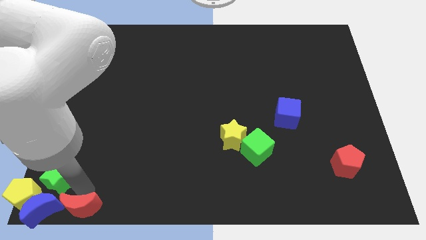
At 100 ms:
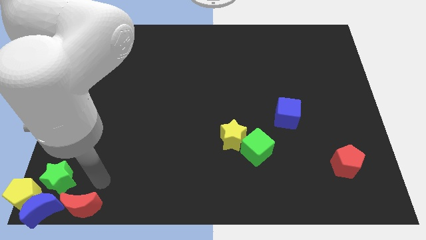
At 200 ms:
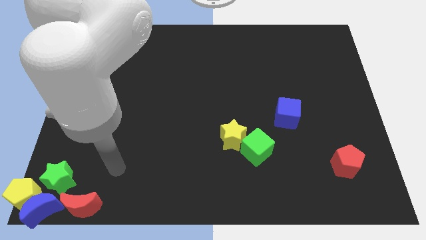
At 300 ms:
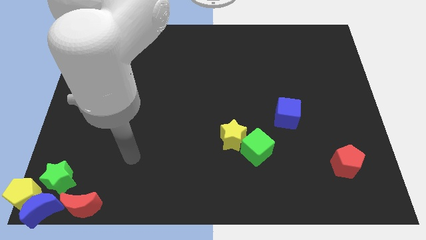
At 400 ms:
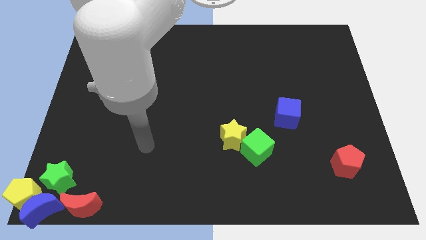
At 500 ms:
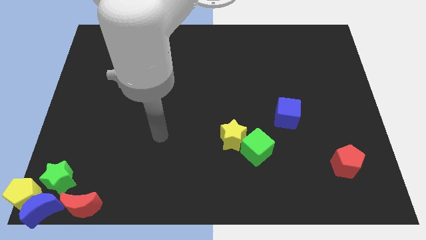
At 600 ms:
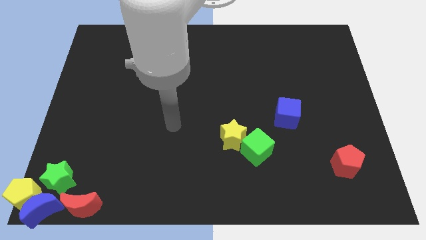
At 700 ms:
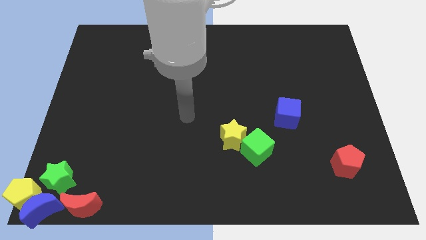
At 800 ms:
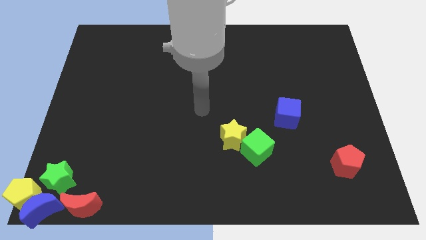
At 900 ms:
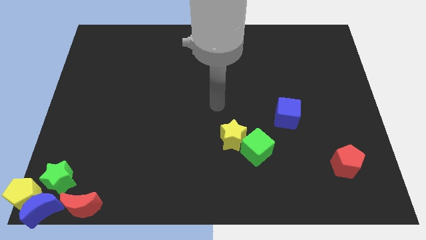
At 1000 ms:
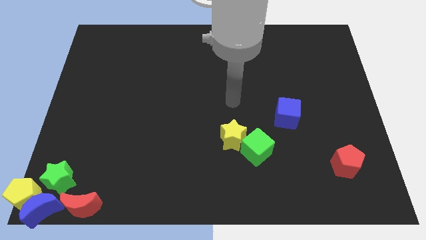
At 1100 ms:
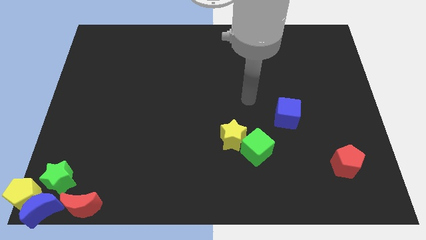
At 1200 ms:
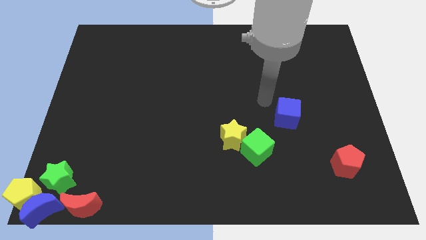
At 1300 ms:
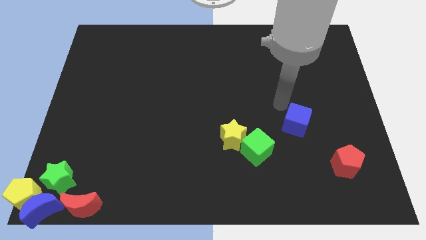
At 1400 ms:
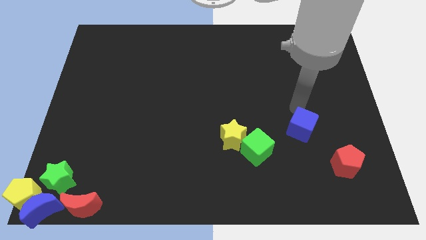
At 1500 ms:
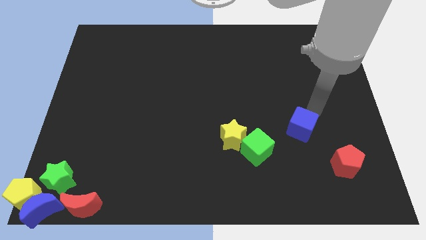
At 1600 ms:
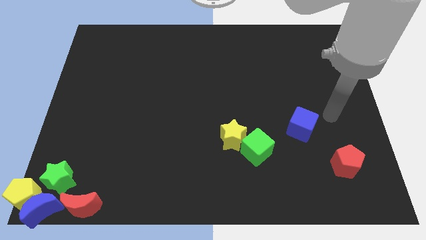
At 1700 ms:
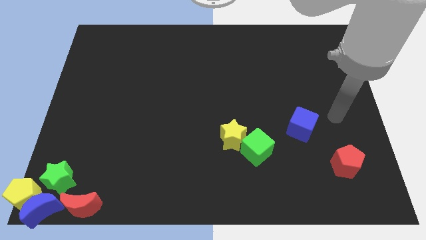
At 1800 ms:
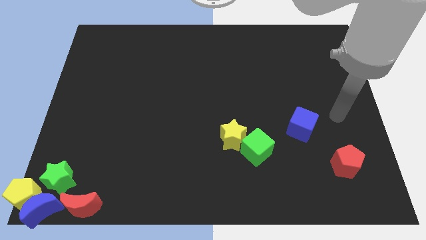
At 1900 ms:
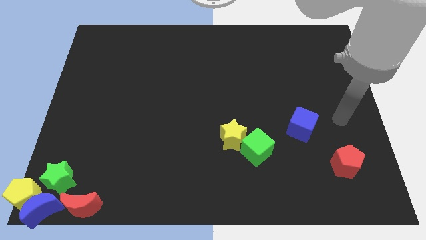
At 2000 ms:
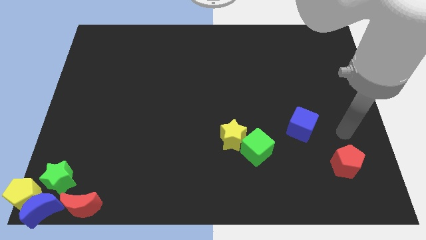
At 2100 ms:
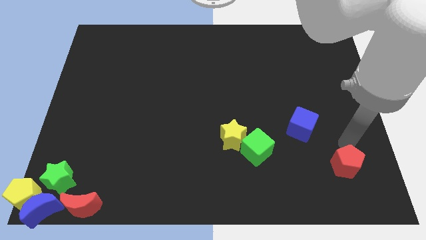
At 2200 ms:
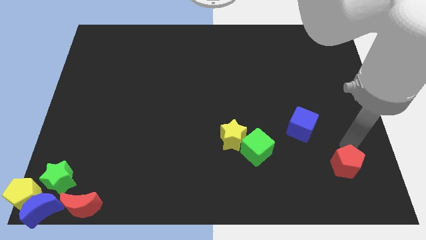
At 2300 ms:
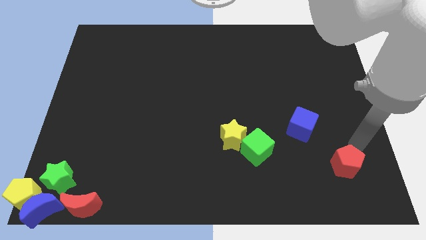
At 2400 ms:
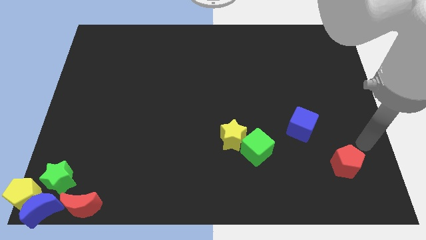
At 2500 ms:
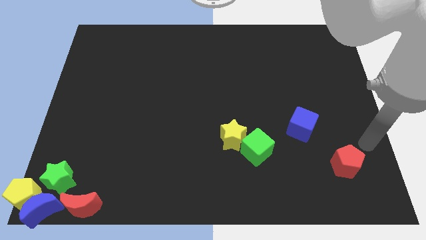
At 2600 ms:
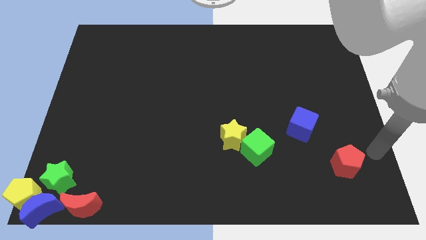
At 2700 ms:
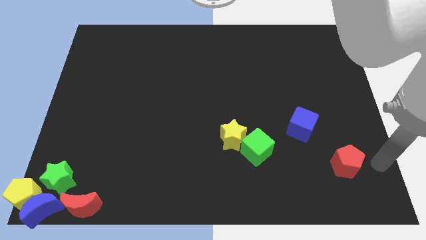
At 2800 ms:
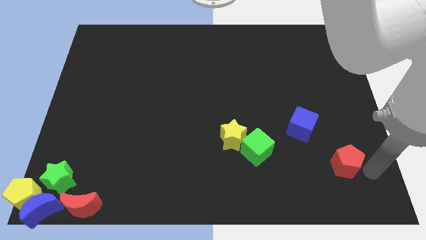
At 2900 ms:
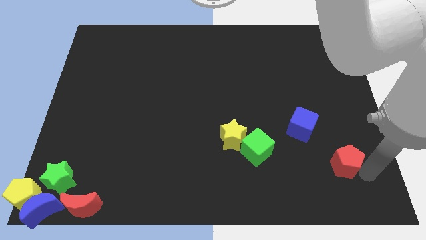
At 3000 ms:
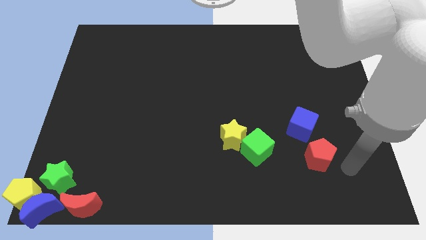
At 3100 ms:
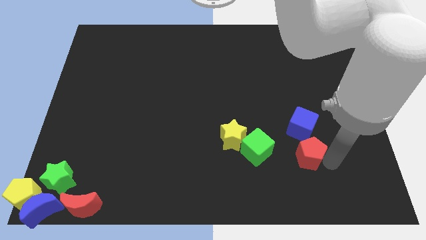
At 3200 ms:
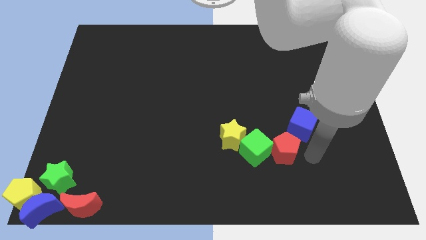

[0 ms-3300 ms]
push the red pentagon close to the green cube

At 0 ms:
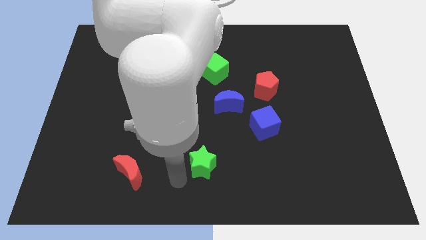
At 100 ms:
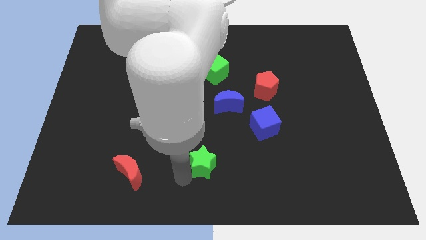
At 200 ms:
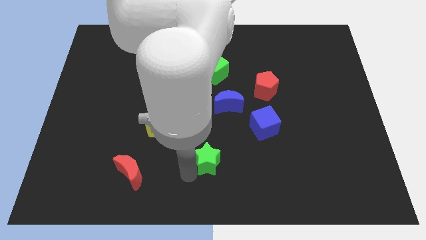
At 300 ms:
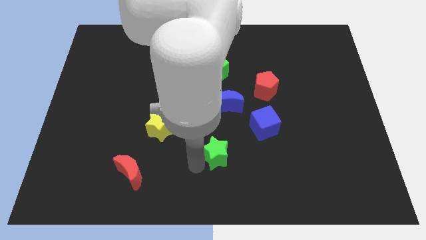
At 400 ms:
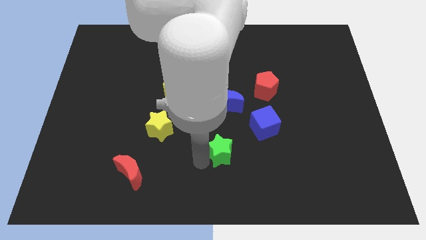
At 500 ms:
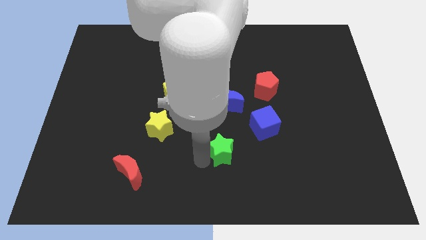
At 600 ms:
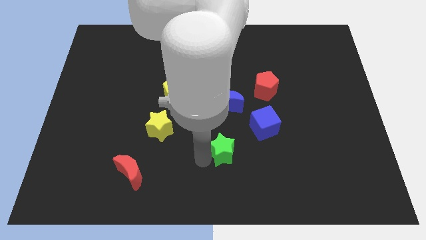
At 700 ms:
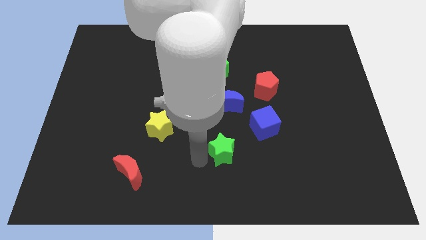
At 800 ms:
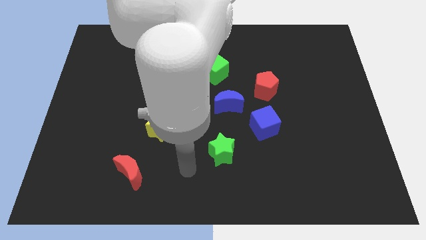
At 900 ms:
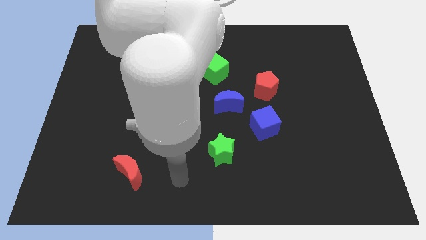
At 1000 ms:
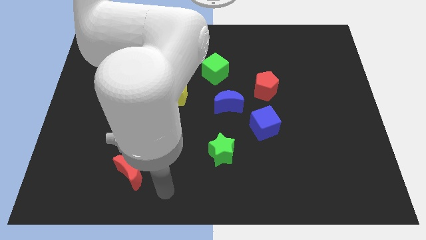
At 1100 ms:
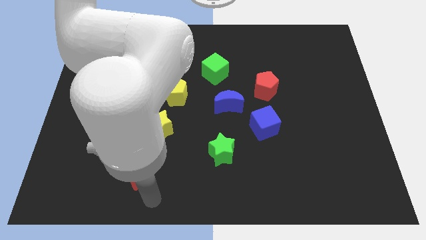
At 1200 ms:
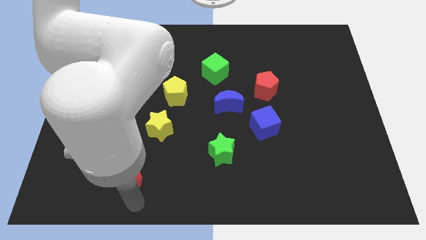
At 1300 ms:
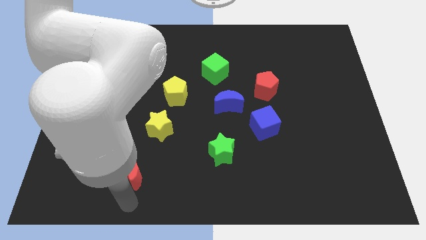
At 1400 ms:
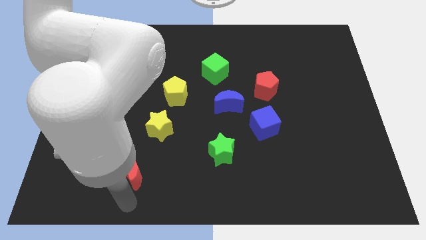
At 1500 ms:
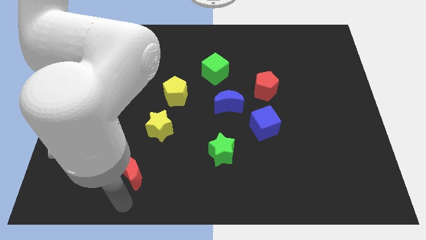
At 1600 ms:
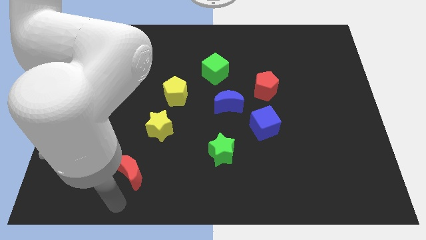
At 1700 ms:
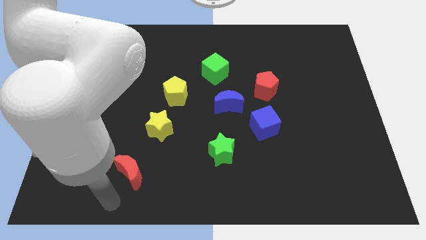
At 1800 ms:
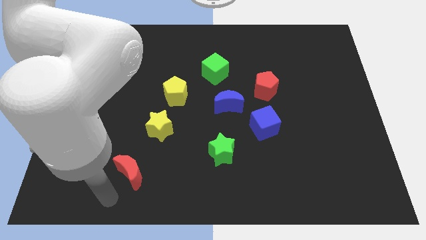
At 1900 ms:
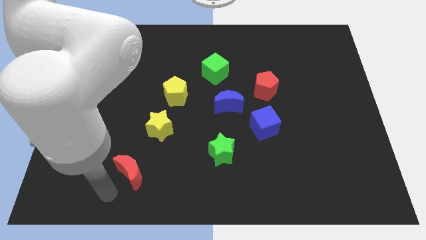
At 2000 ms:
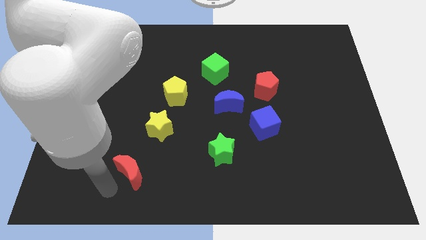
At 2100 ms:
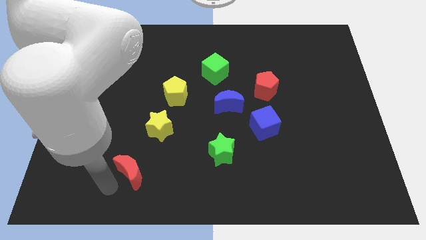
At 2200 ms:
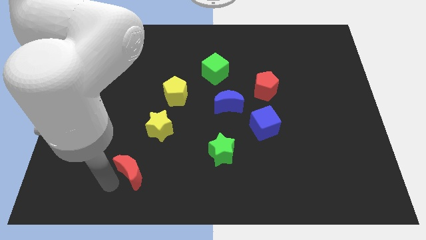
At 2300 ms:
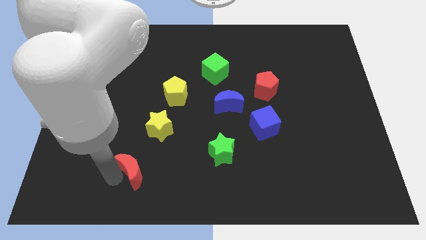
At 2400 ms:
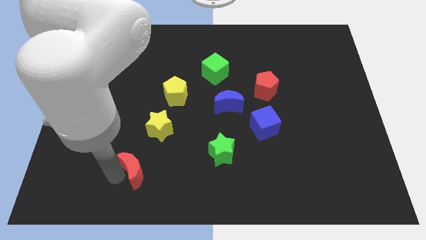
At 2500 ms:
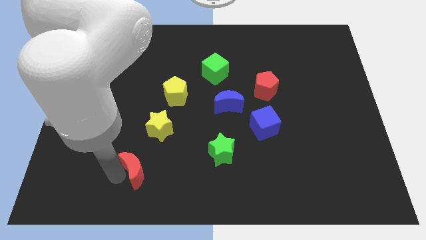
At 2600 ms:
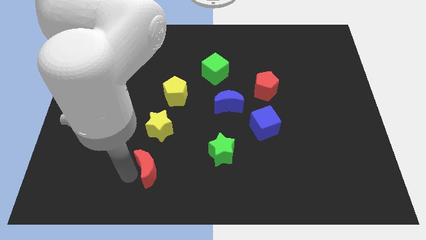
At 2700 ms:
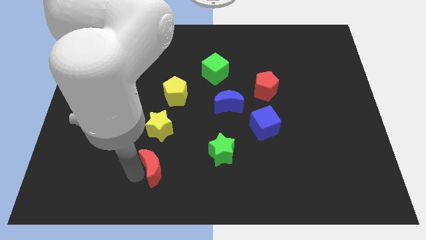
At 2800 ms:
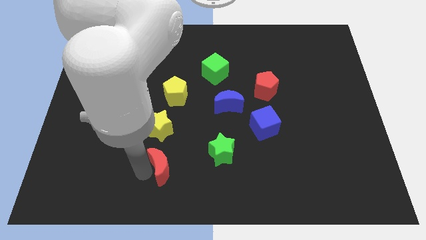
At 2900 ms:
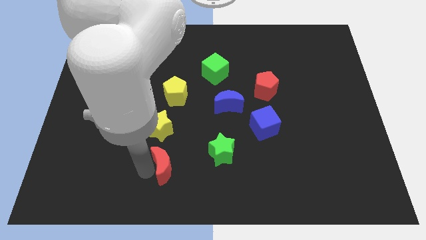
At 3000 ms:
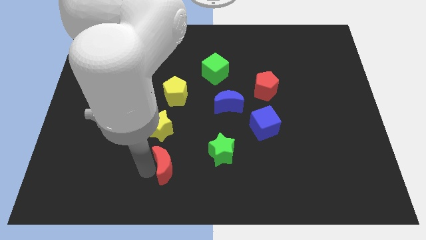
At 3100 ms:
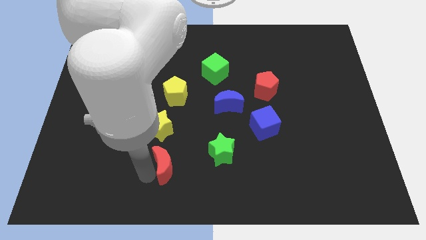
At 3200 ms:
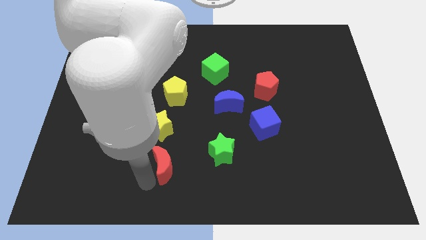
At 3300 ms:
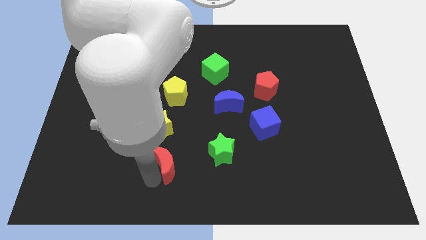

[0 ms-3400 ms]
push the red moon and green star to the right side

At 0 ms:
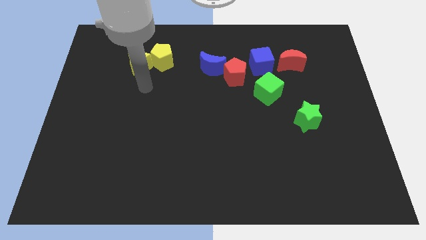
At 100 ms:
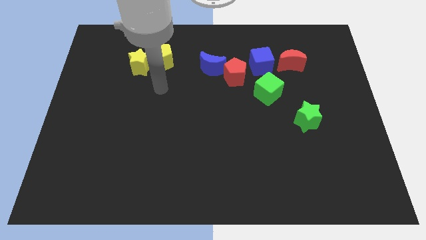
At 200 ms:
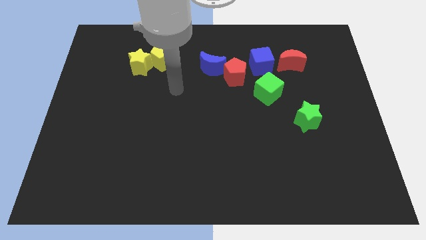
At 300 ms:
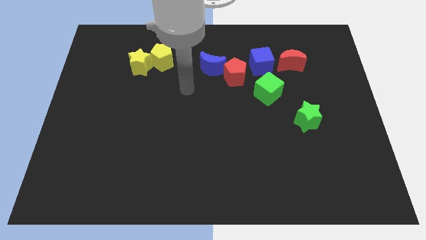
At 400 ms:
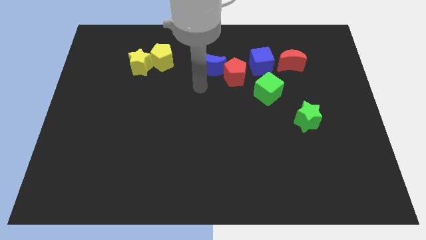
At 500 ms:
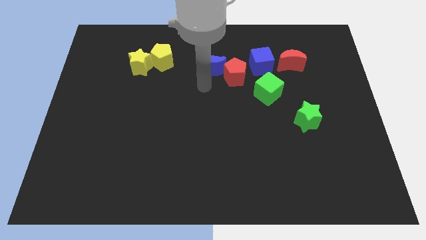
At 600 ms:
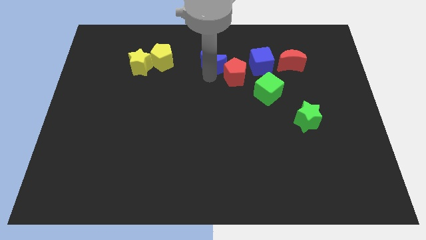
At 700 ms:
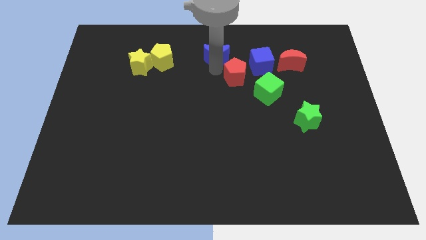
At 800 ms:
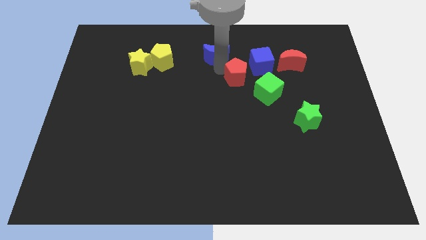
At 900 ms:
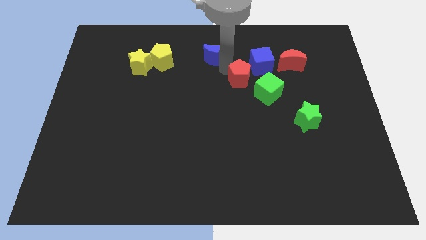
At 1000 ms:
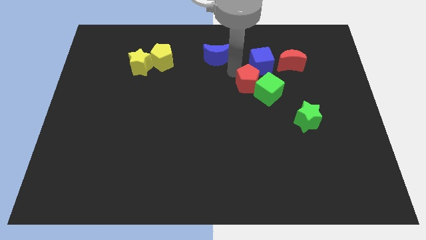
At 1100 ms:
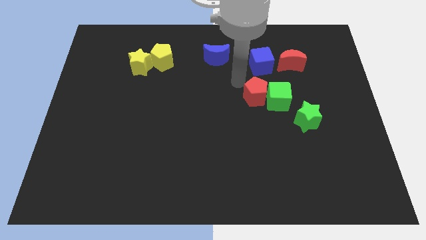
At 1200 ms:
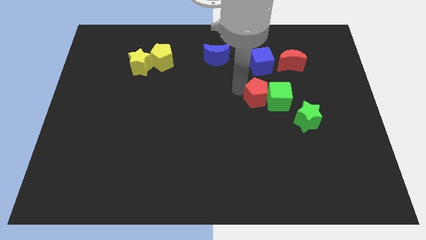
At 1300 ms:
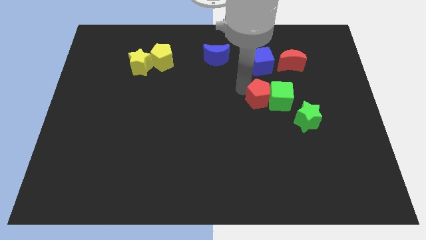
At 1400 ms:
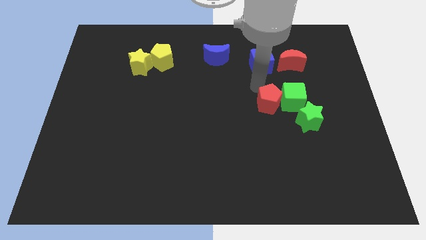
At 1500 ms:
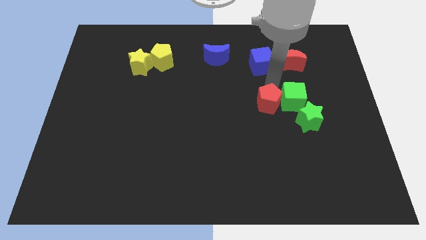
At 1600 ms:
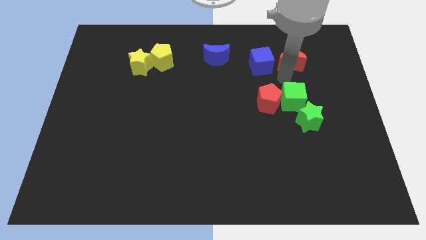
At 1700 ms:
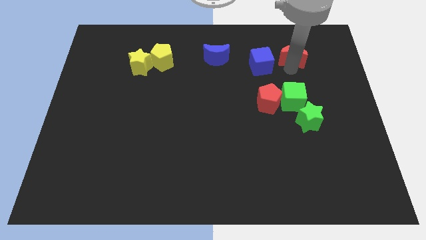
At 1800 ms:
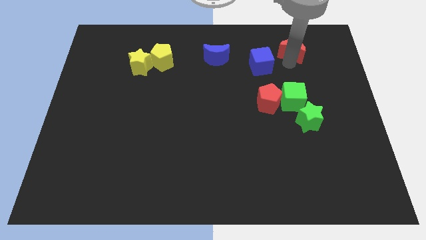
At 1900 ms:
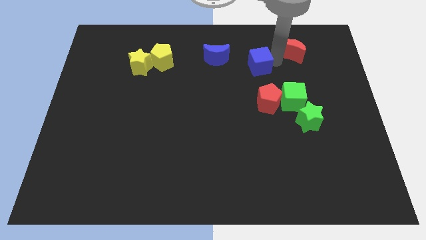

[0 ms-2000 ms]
move the red pentagon left to the green cube

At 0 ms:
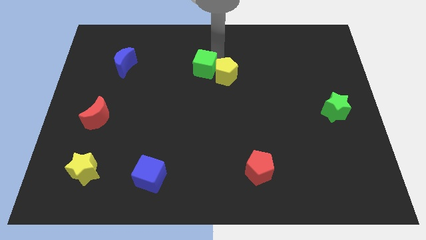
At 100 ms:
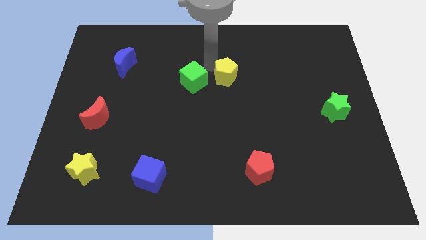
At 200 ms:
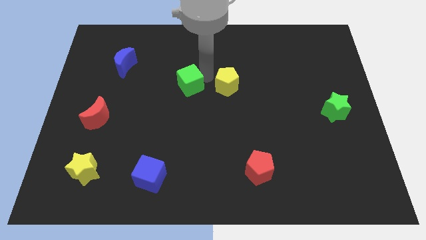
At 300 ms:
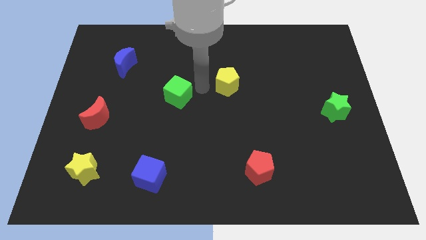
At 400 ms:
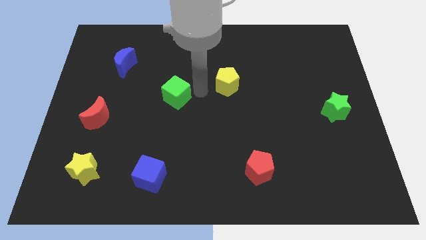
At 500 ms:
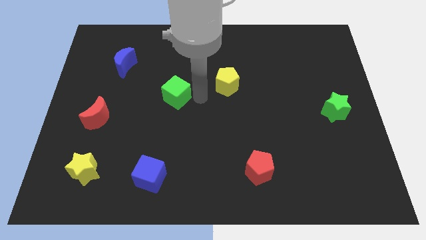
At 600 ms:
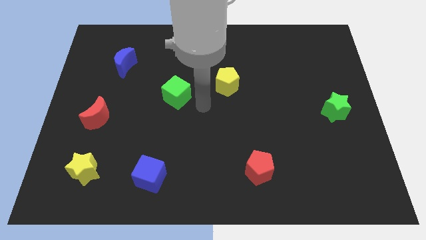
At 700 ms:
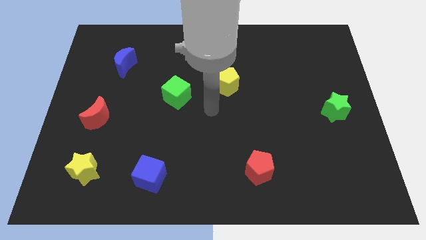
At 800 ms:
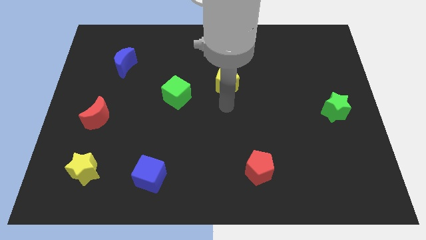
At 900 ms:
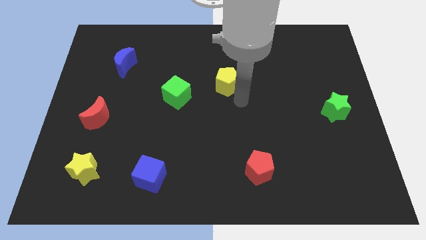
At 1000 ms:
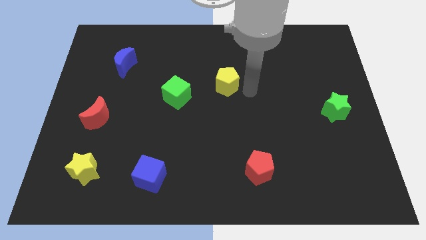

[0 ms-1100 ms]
separate the green cube from the yellow pentagon
